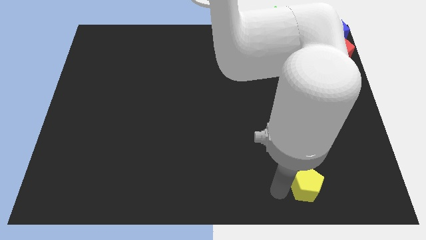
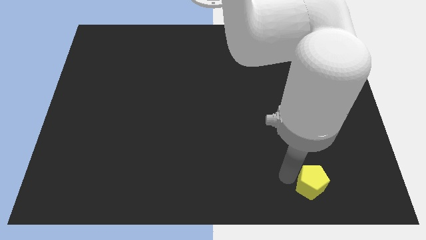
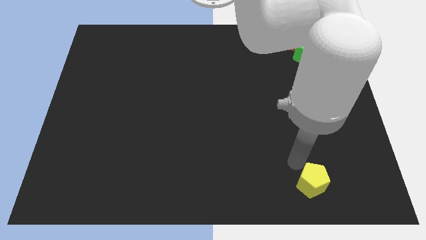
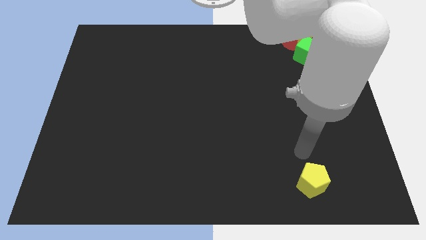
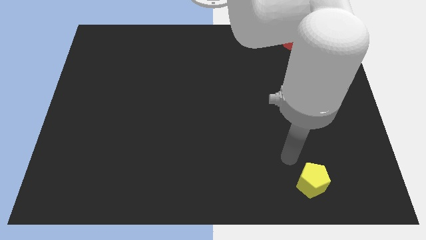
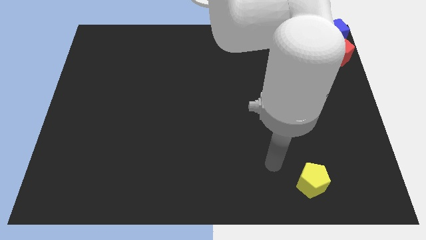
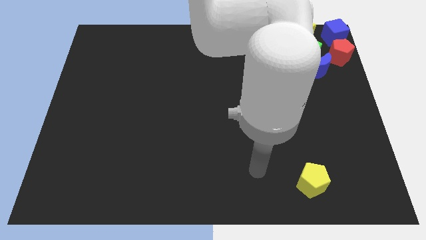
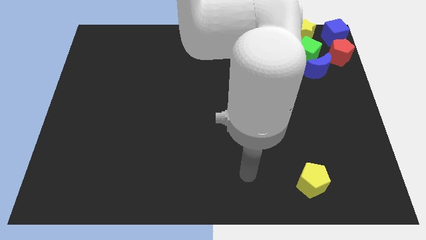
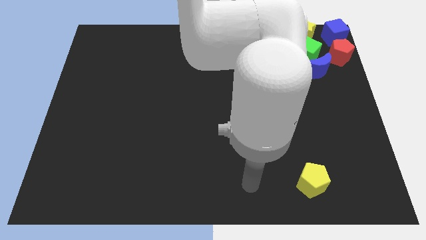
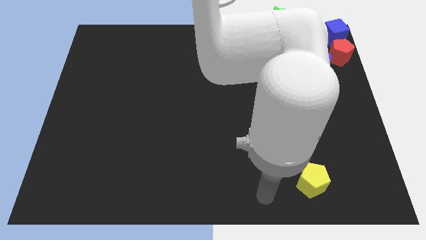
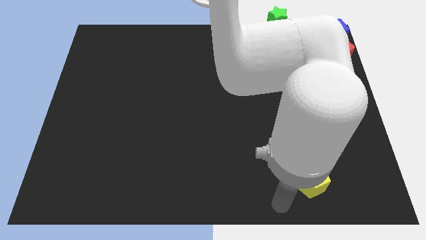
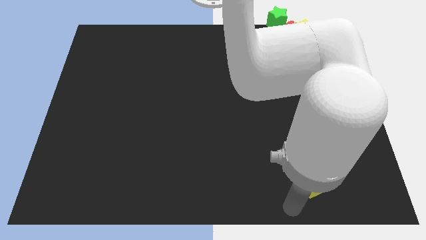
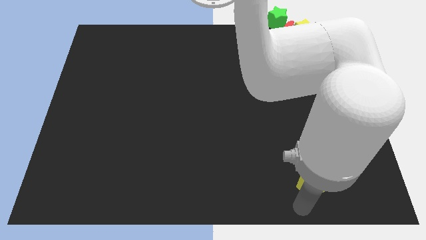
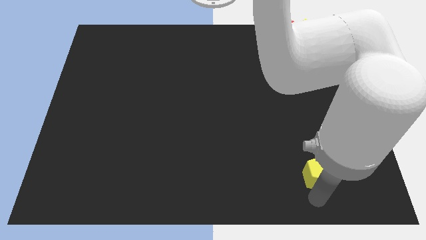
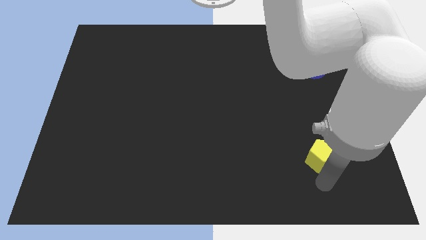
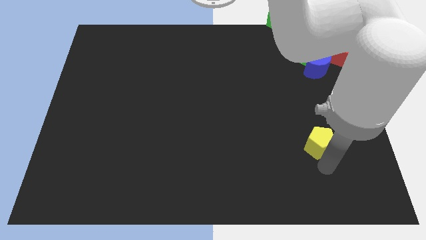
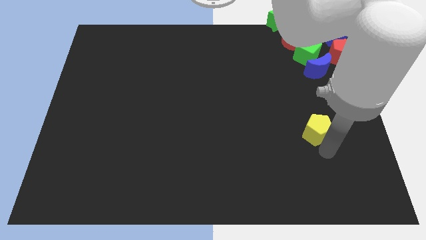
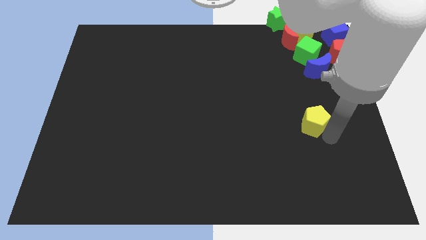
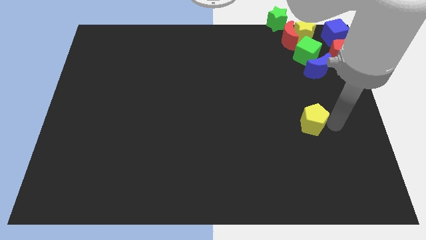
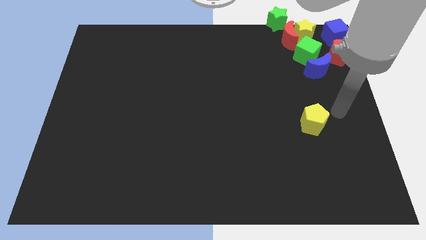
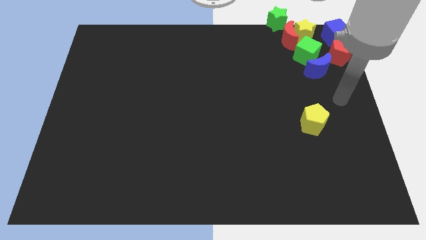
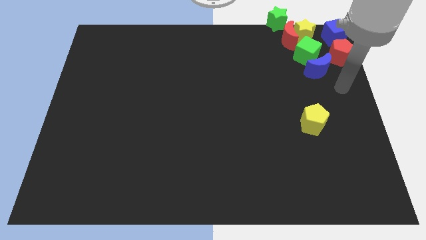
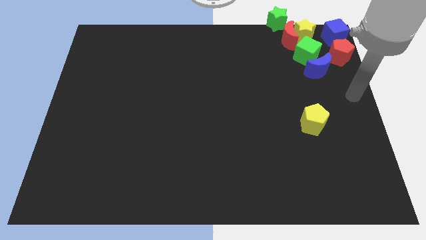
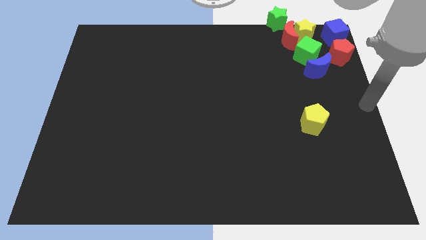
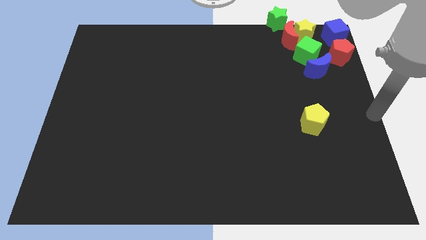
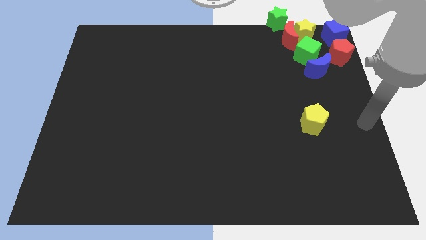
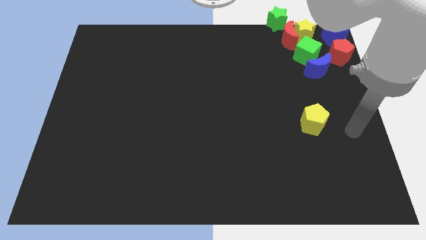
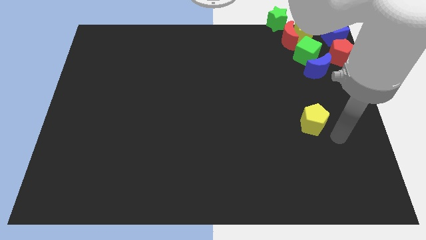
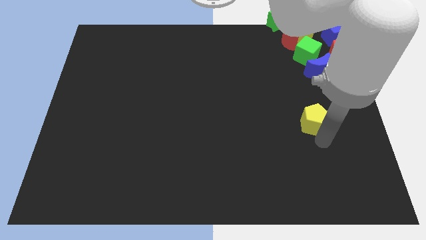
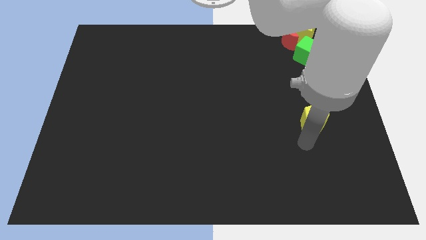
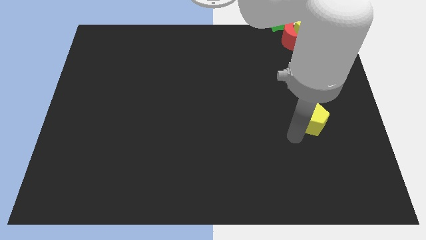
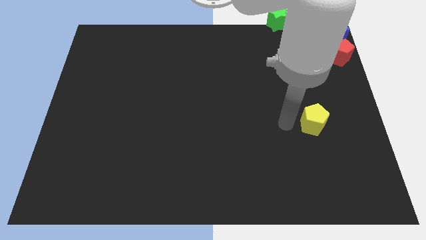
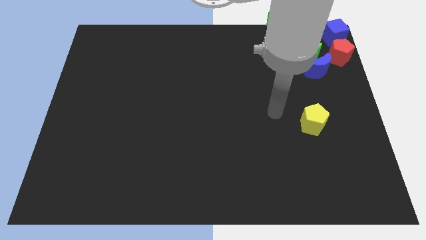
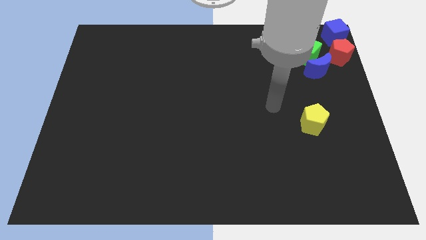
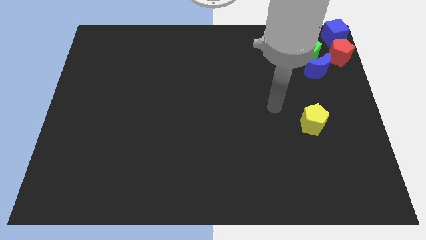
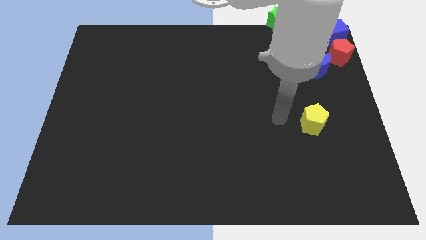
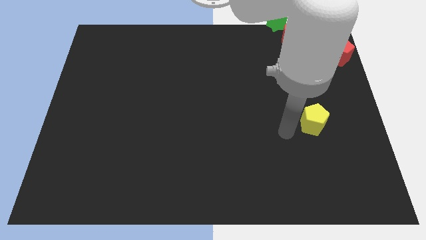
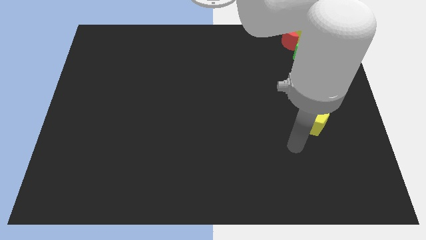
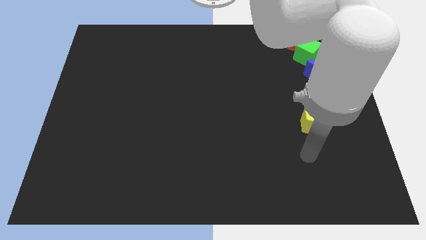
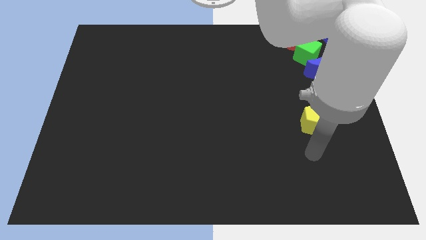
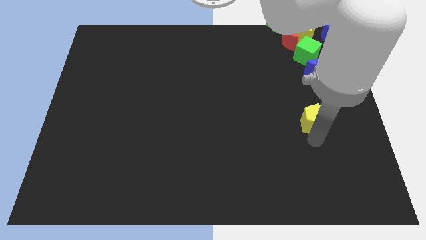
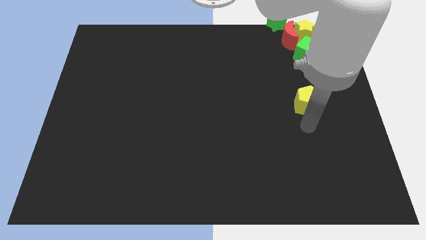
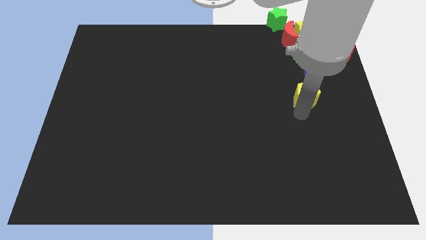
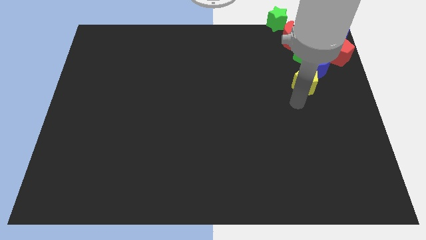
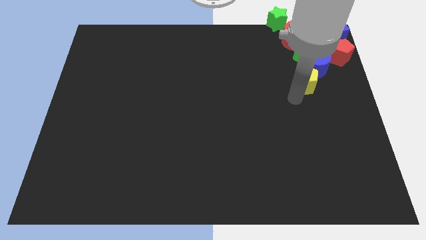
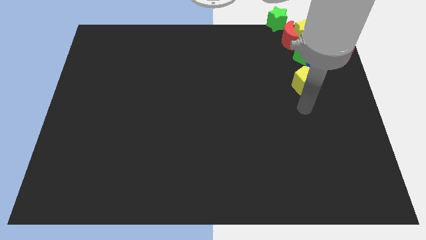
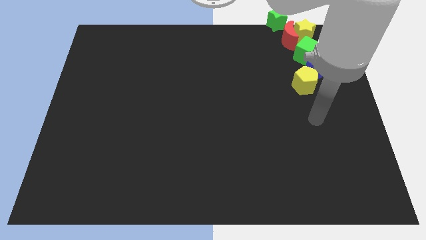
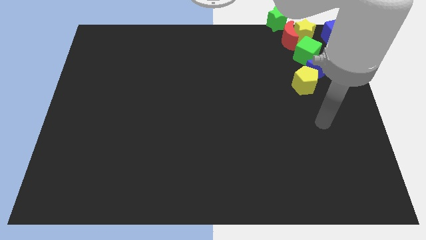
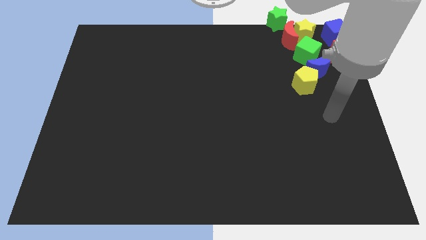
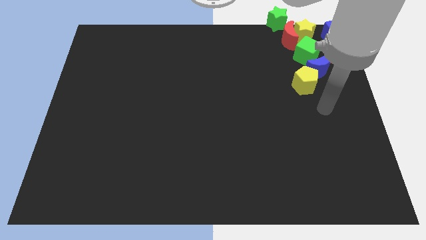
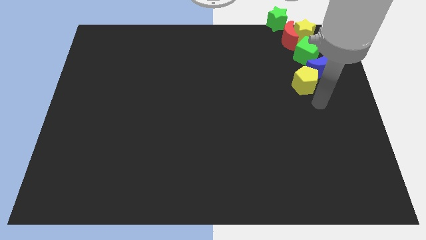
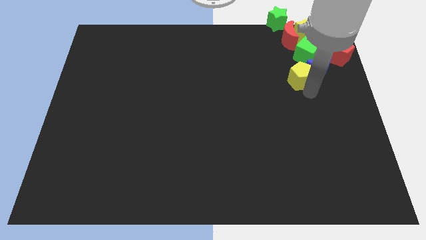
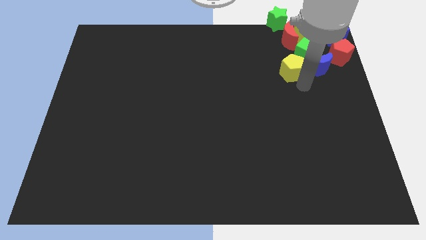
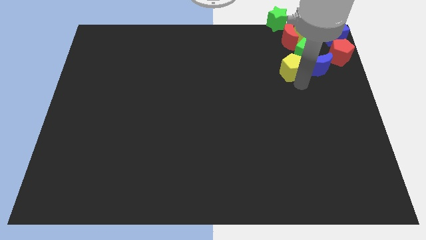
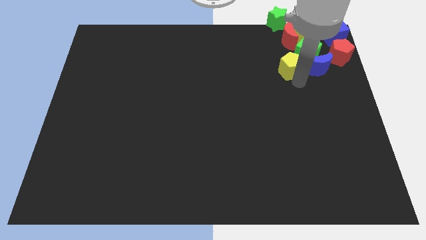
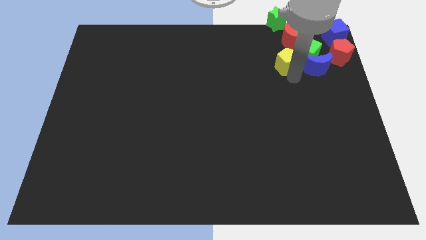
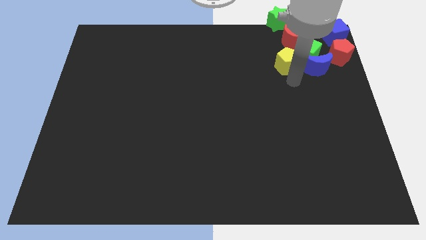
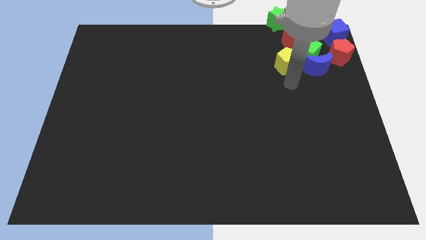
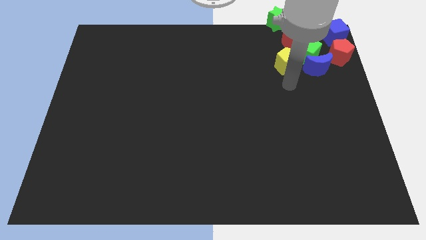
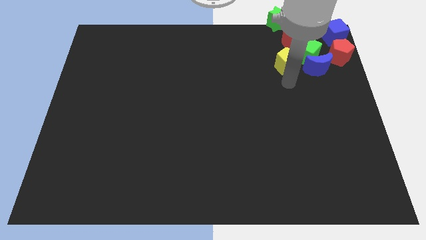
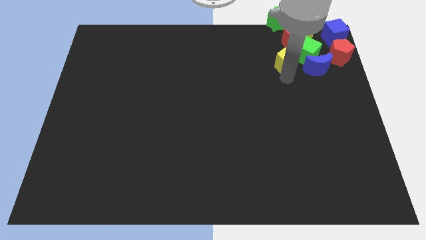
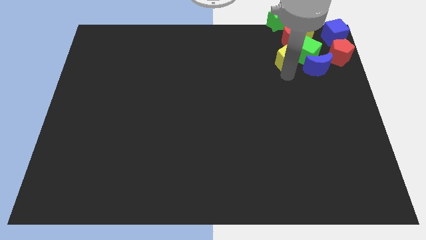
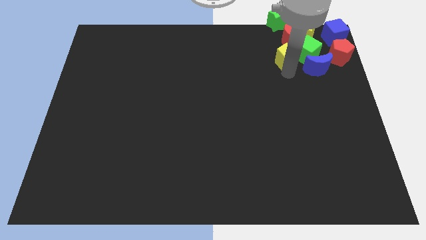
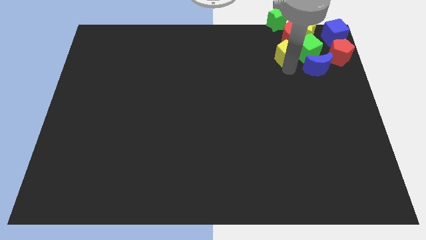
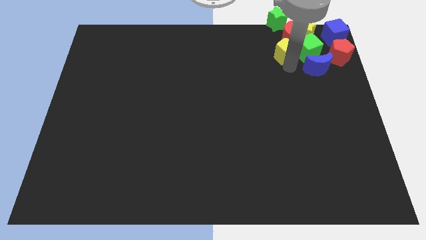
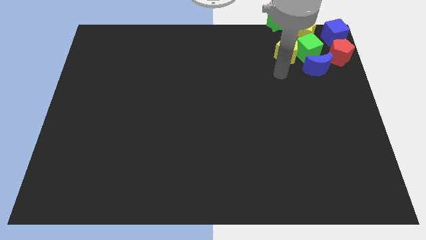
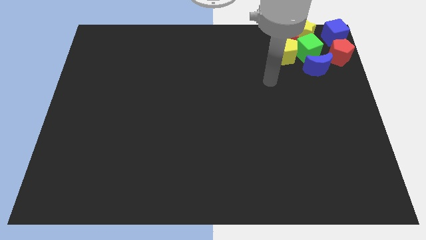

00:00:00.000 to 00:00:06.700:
push the yellow pentagon into the green cube

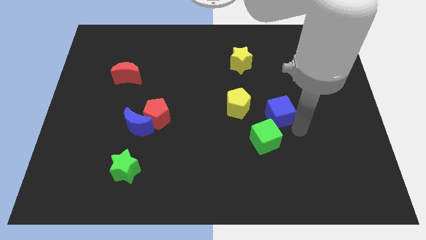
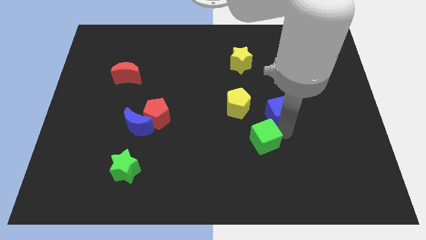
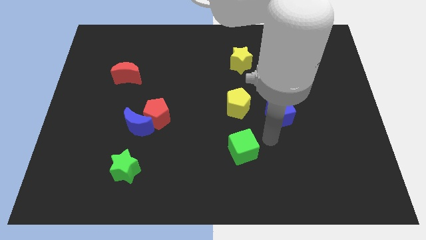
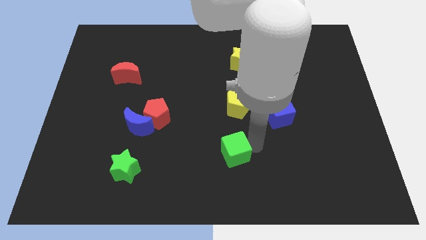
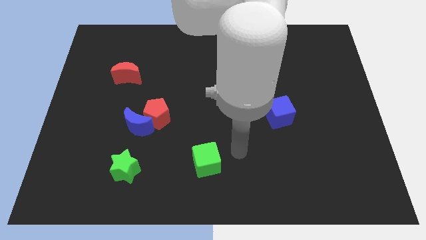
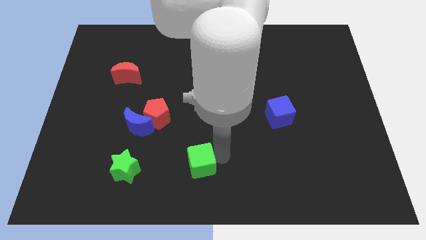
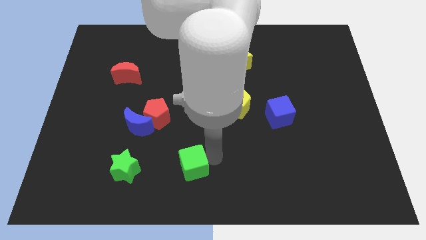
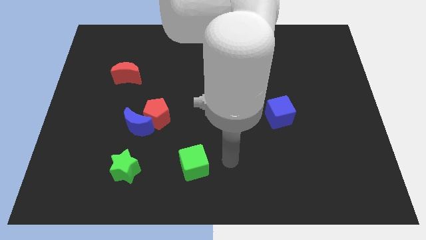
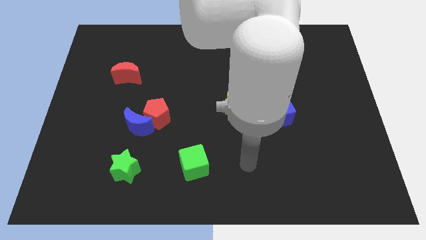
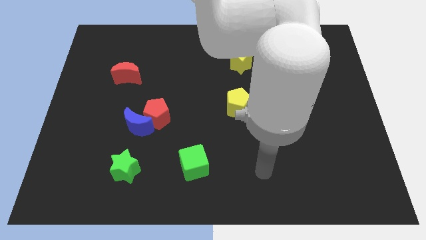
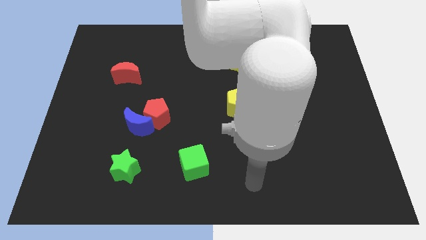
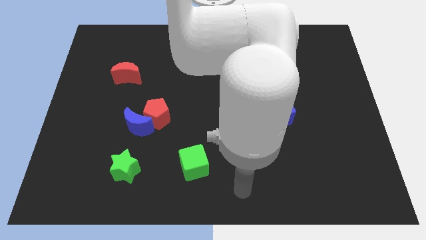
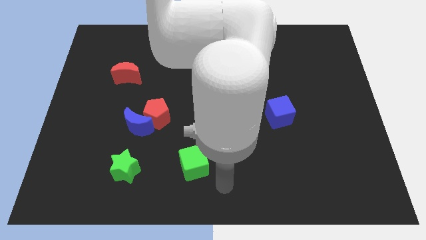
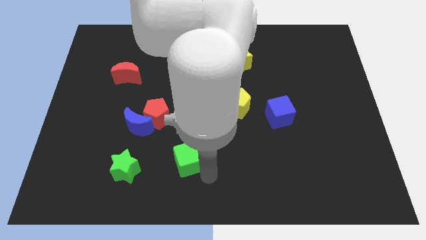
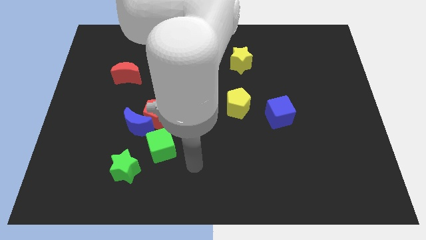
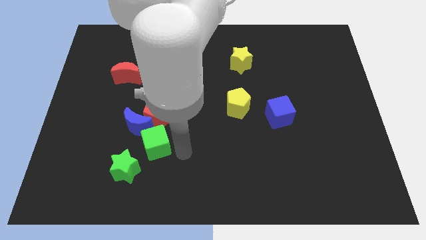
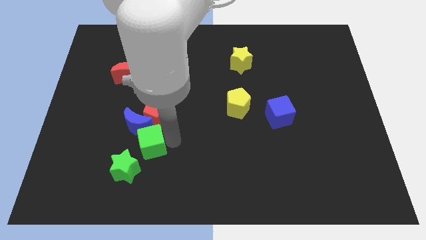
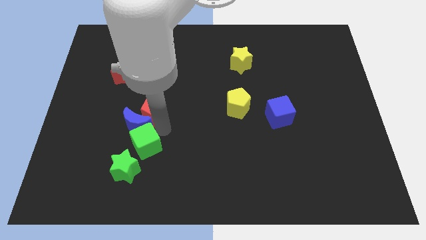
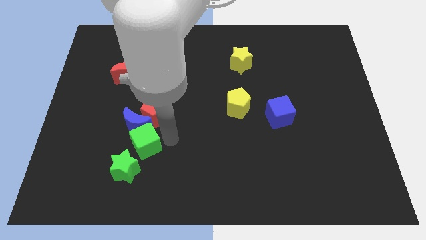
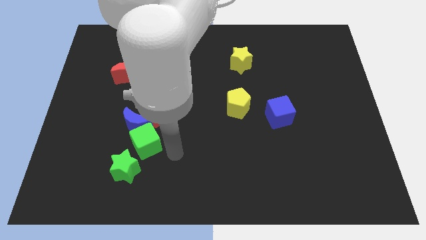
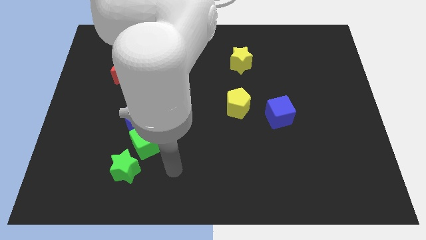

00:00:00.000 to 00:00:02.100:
place the green cube below the blue crescent

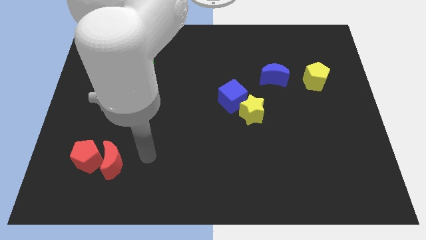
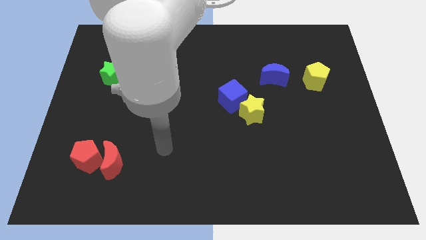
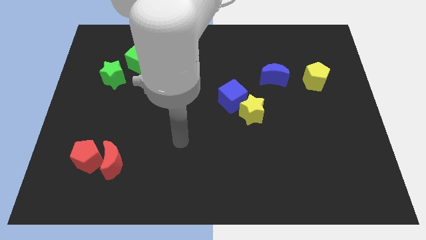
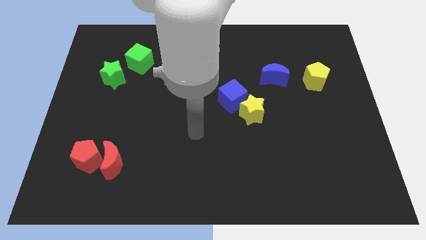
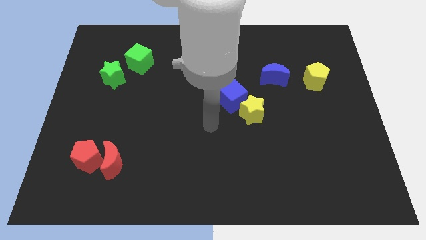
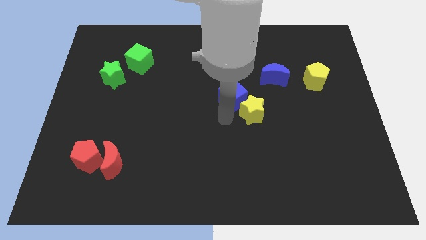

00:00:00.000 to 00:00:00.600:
place the hand close to the blue cube
